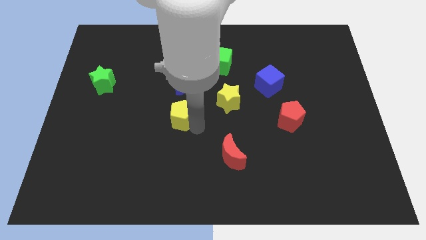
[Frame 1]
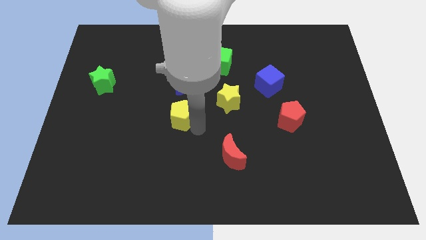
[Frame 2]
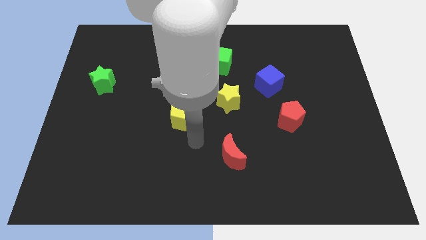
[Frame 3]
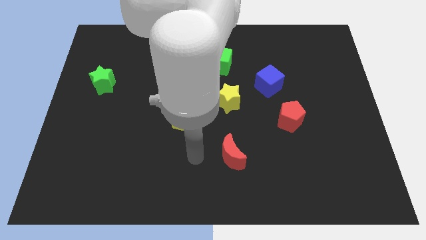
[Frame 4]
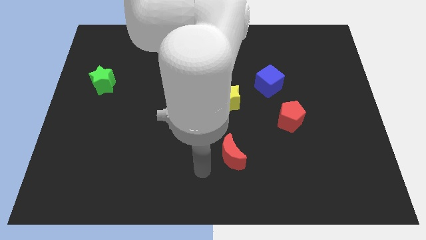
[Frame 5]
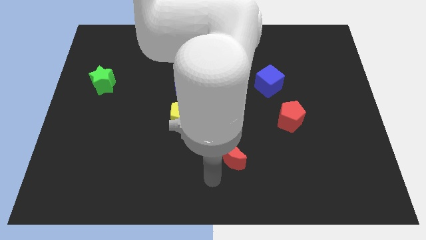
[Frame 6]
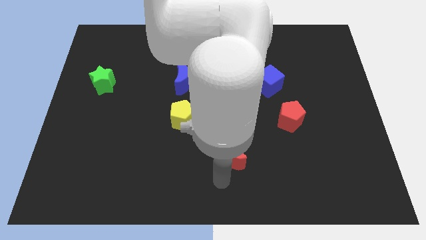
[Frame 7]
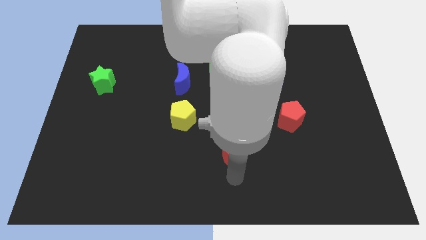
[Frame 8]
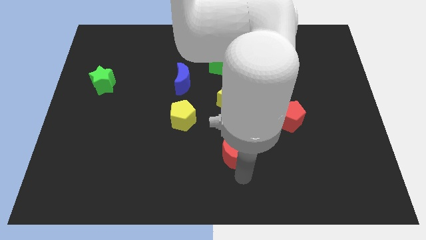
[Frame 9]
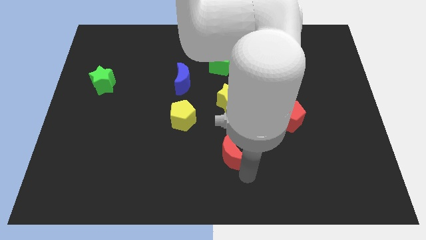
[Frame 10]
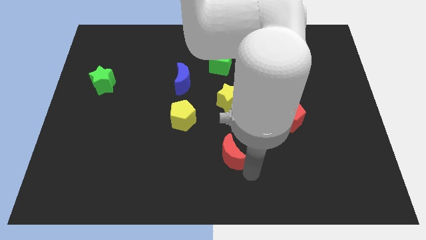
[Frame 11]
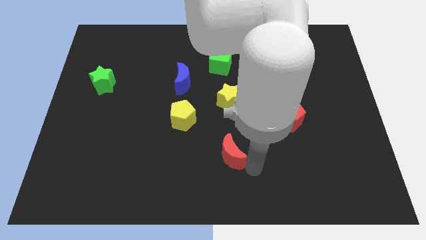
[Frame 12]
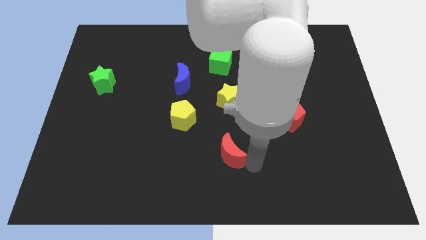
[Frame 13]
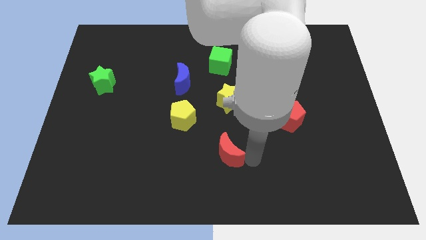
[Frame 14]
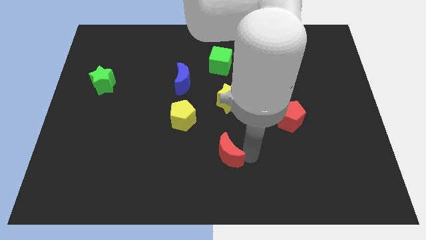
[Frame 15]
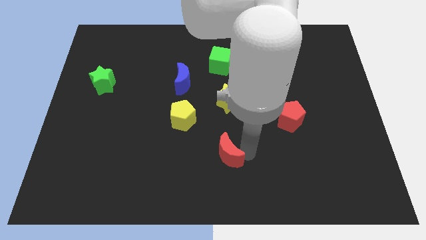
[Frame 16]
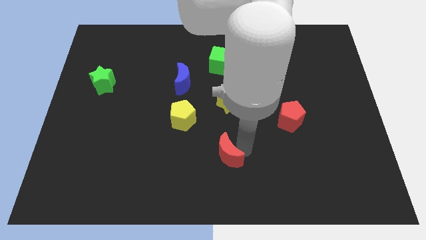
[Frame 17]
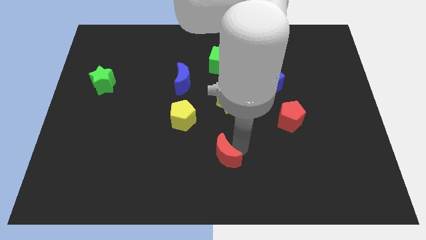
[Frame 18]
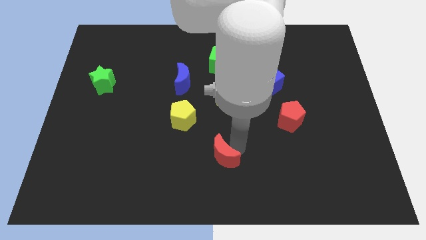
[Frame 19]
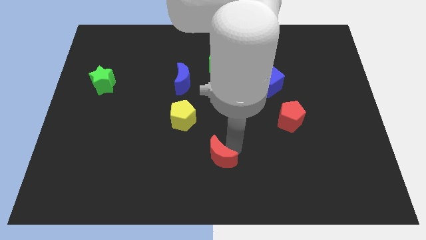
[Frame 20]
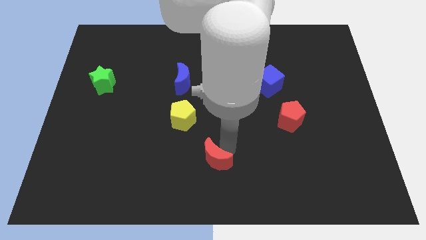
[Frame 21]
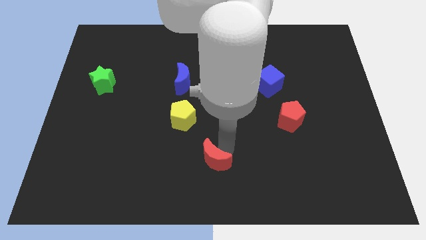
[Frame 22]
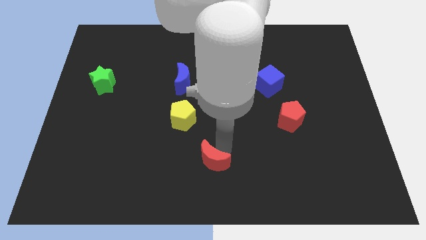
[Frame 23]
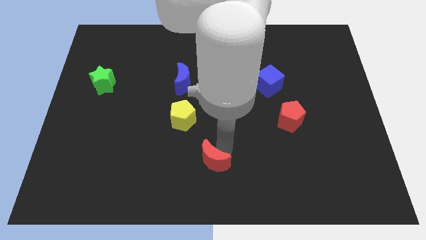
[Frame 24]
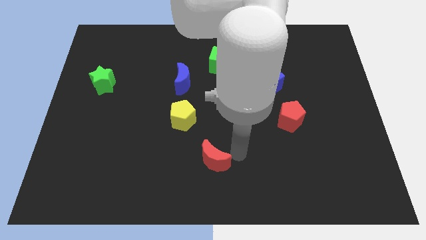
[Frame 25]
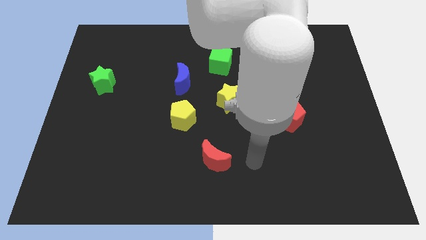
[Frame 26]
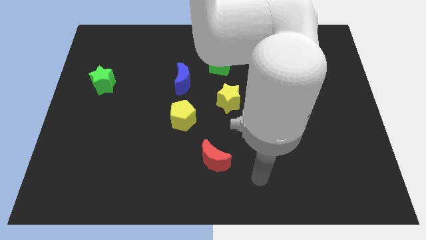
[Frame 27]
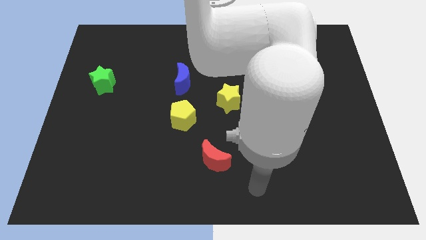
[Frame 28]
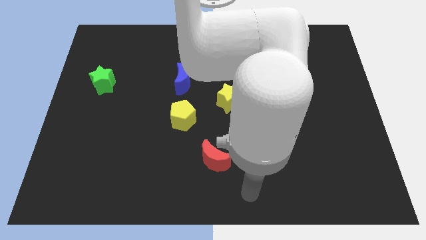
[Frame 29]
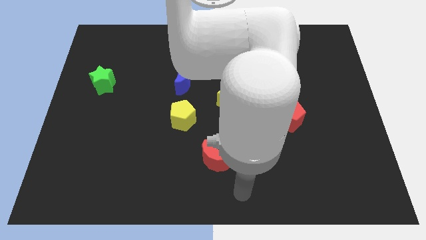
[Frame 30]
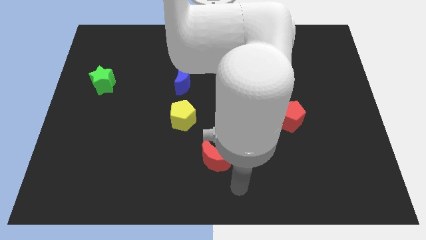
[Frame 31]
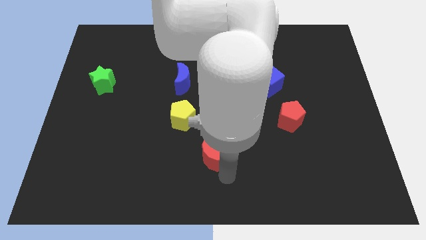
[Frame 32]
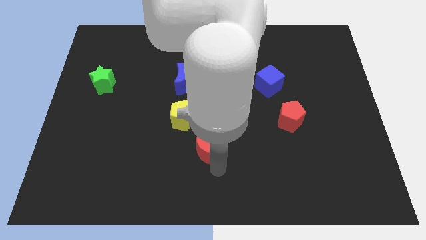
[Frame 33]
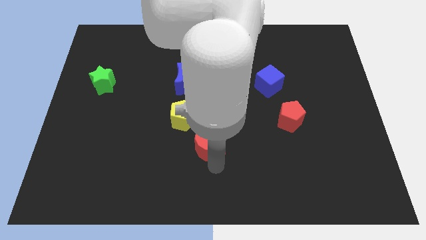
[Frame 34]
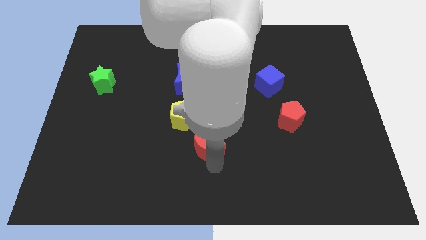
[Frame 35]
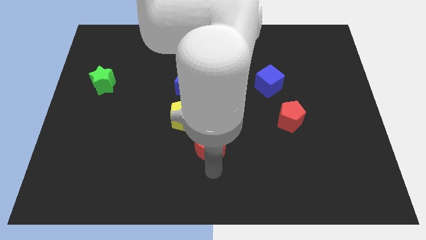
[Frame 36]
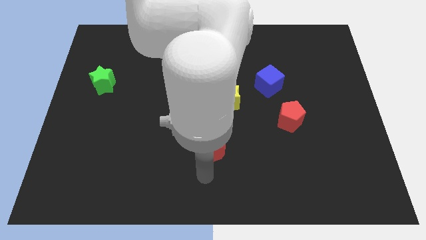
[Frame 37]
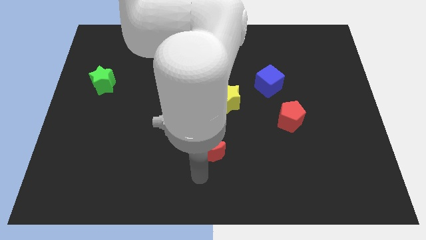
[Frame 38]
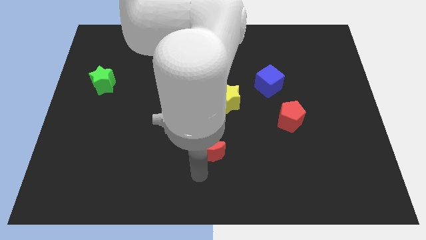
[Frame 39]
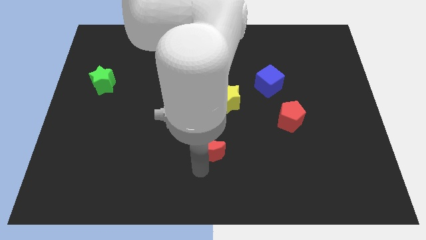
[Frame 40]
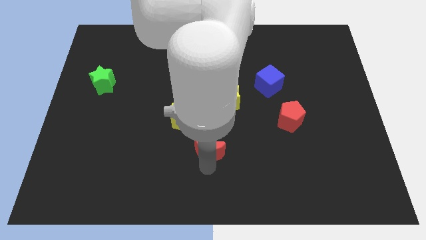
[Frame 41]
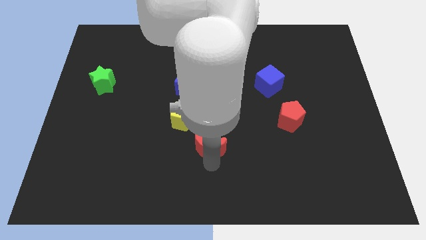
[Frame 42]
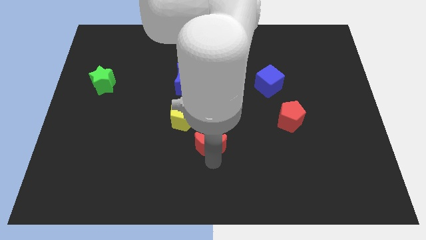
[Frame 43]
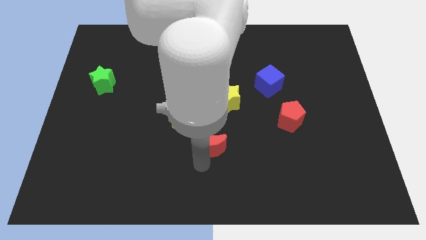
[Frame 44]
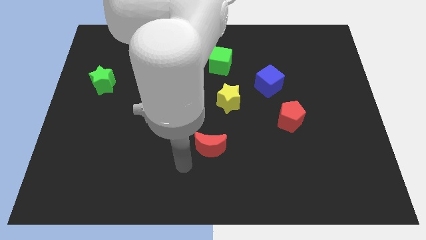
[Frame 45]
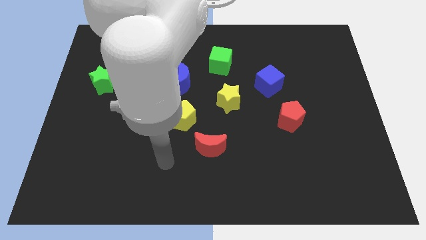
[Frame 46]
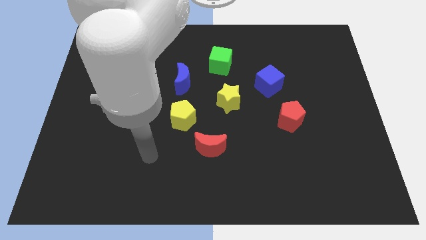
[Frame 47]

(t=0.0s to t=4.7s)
place the red moon bottom right to the yellow pentagon

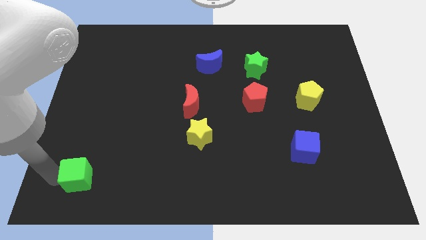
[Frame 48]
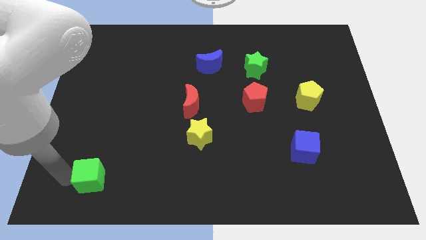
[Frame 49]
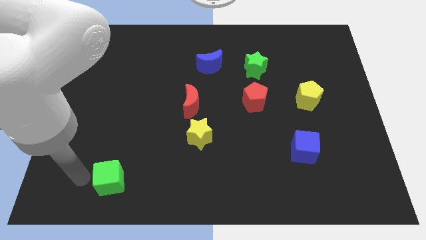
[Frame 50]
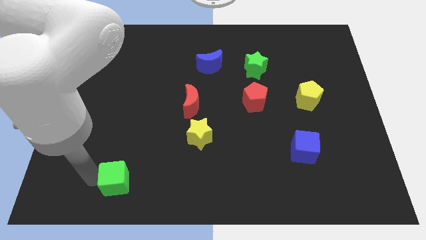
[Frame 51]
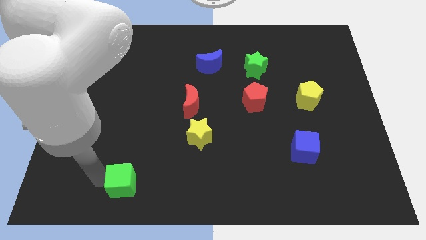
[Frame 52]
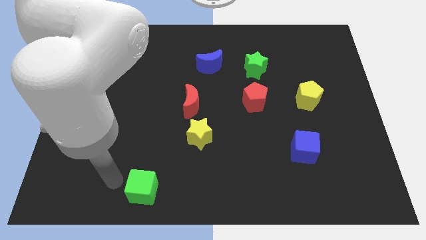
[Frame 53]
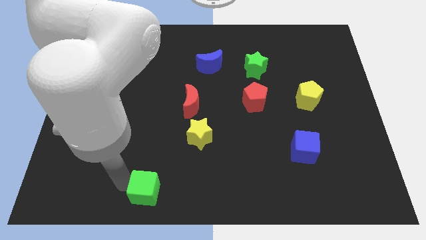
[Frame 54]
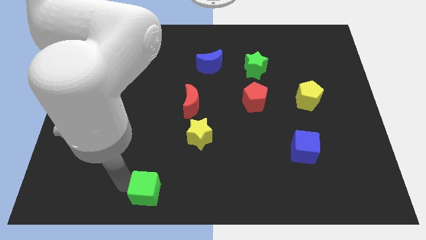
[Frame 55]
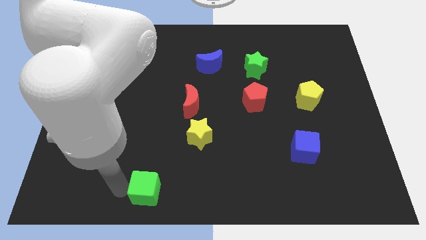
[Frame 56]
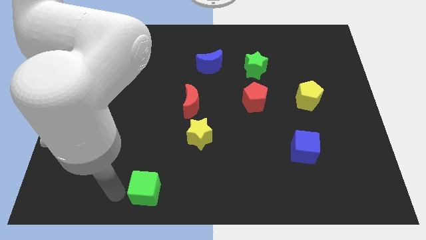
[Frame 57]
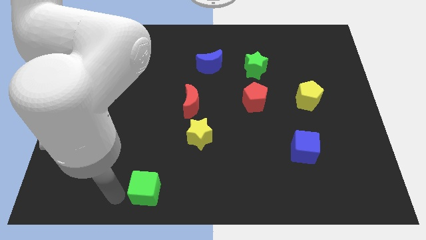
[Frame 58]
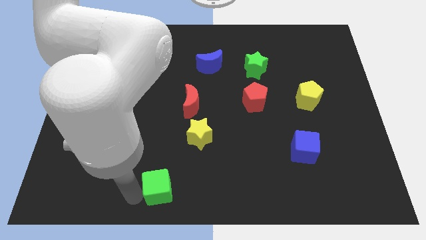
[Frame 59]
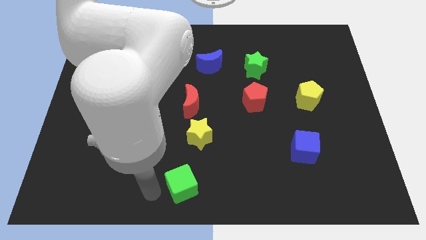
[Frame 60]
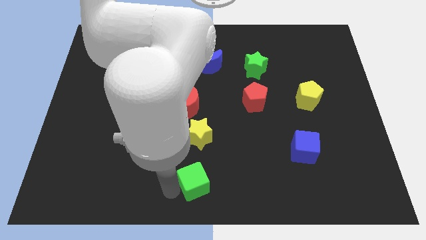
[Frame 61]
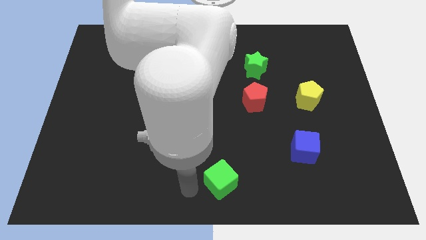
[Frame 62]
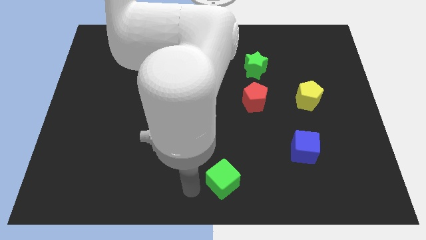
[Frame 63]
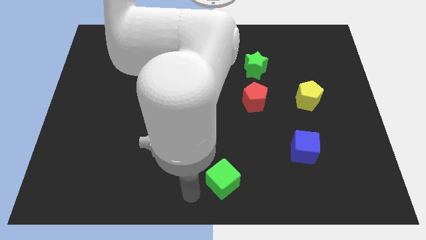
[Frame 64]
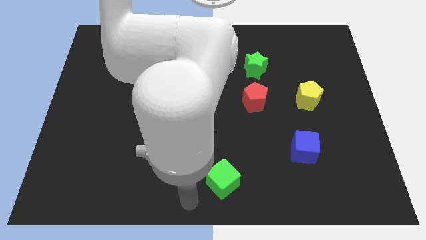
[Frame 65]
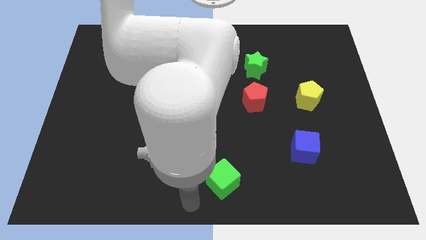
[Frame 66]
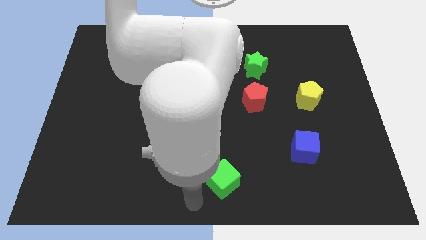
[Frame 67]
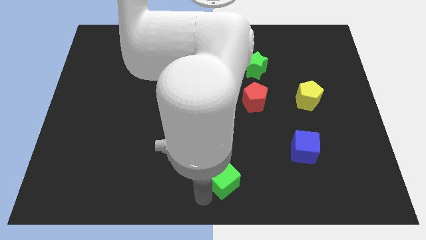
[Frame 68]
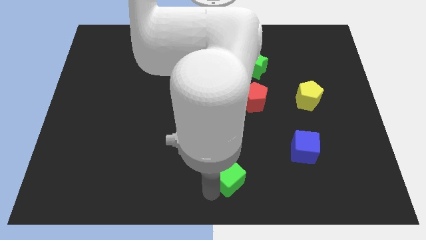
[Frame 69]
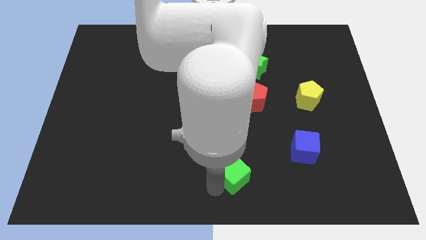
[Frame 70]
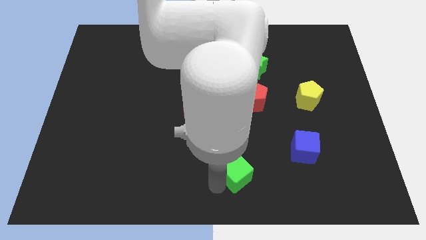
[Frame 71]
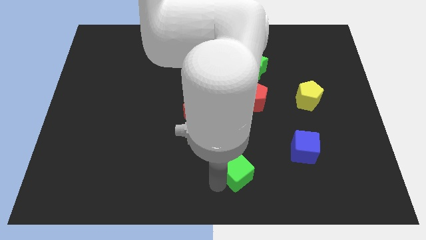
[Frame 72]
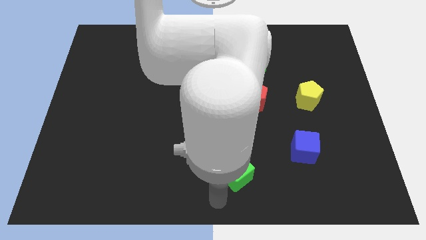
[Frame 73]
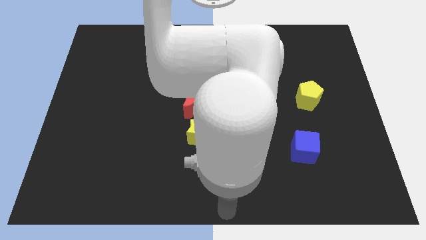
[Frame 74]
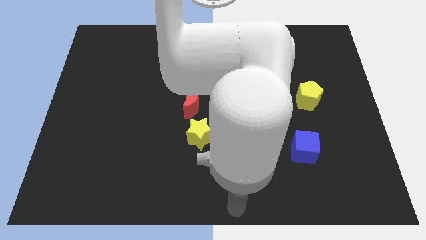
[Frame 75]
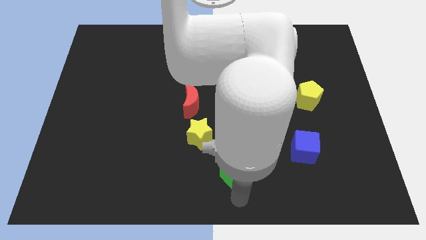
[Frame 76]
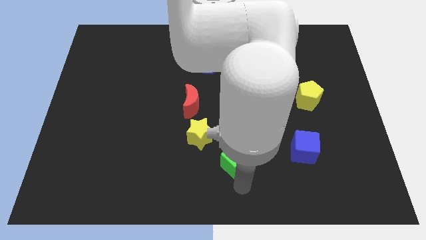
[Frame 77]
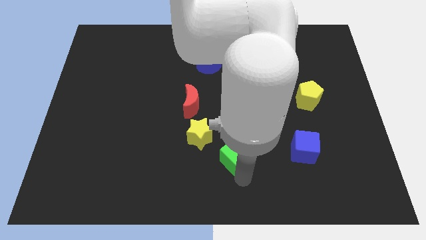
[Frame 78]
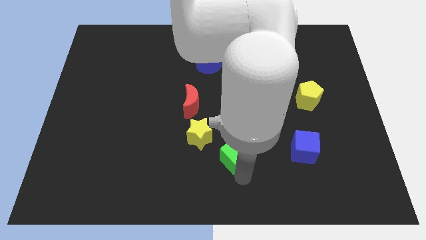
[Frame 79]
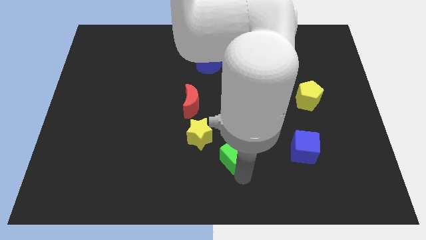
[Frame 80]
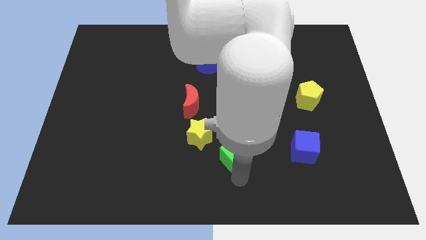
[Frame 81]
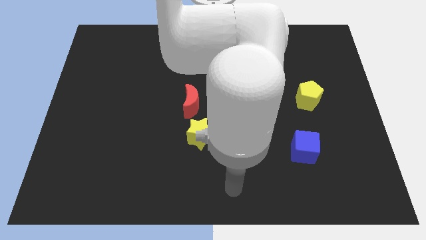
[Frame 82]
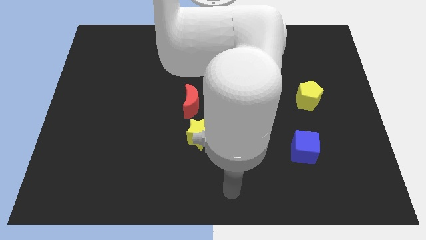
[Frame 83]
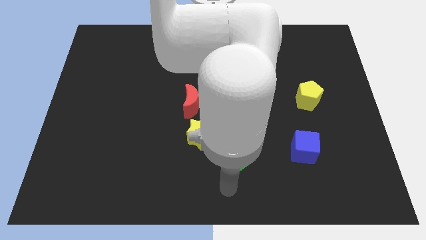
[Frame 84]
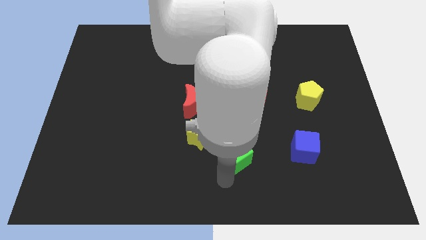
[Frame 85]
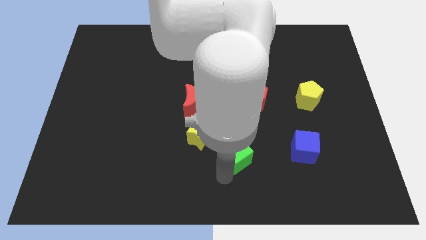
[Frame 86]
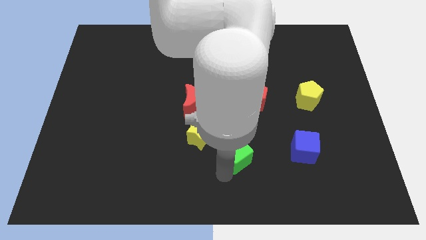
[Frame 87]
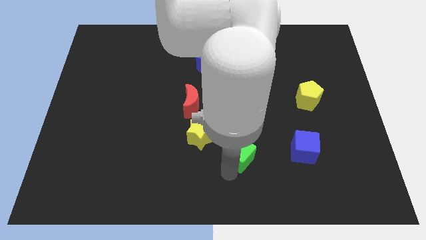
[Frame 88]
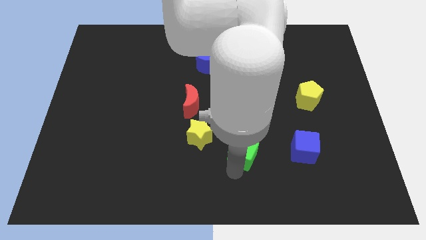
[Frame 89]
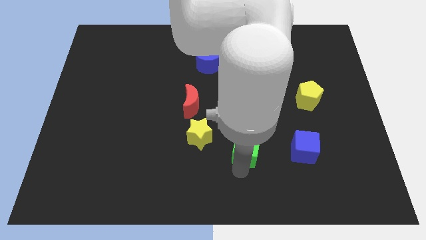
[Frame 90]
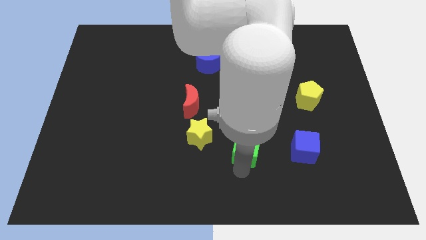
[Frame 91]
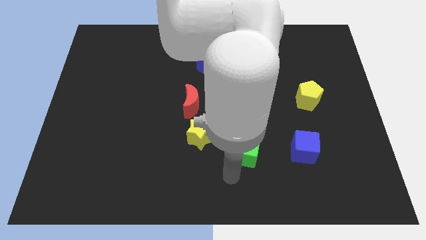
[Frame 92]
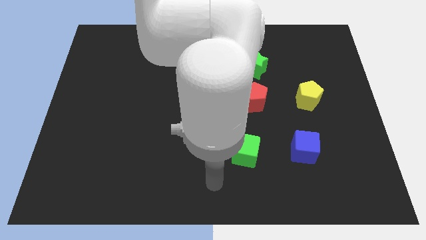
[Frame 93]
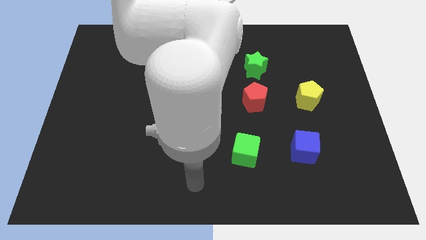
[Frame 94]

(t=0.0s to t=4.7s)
push the green cube to the bottom of the red pentagon
